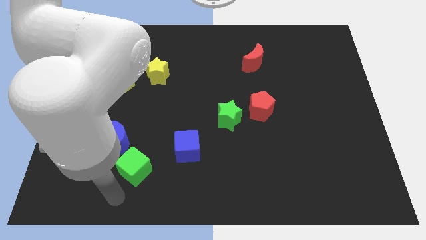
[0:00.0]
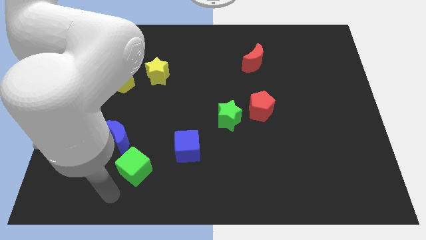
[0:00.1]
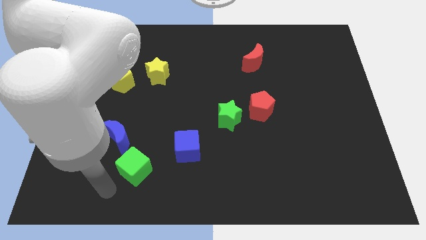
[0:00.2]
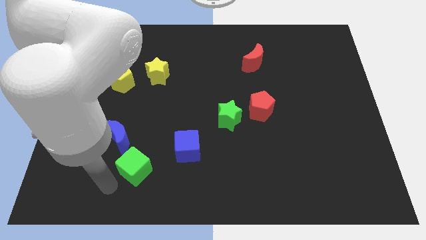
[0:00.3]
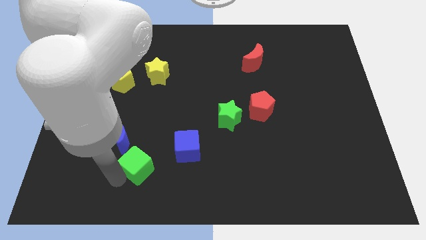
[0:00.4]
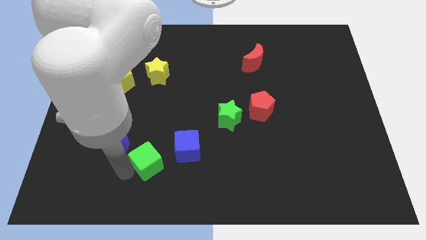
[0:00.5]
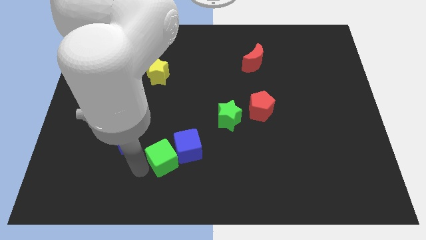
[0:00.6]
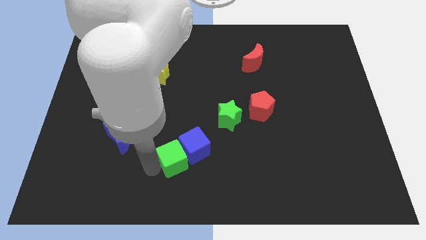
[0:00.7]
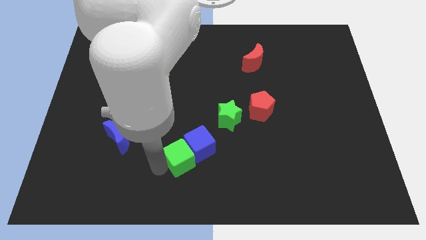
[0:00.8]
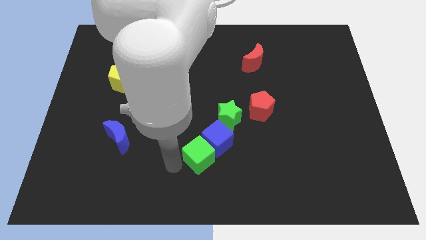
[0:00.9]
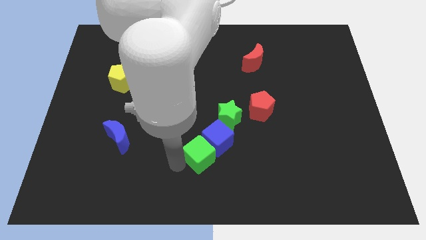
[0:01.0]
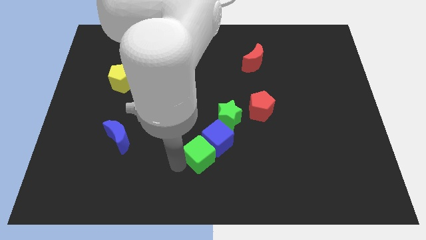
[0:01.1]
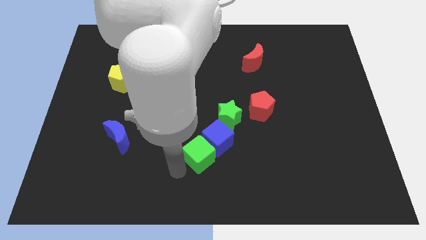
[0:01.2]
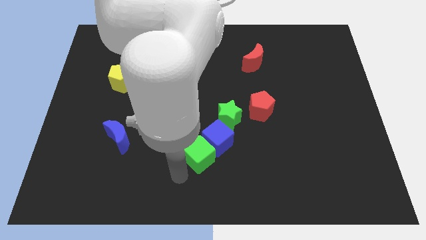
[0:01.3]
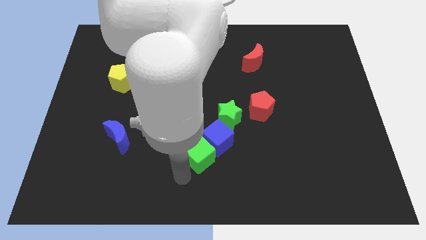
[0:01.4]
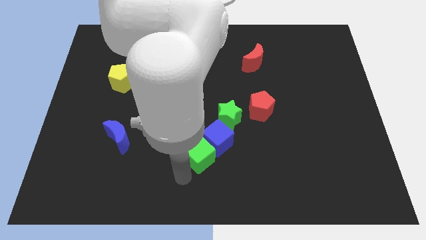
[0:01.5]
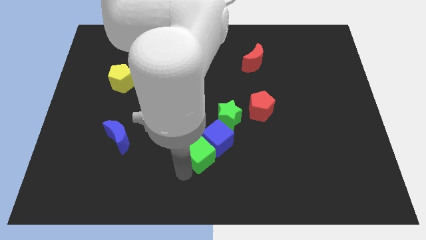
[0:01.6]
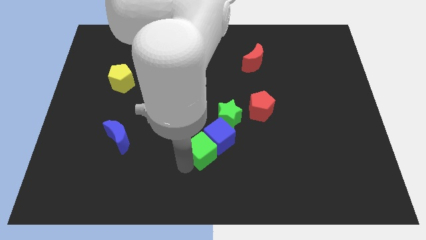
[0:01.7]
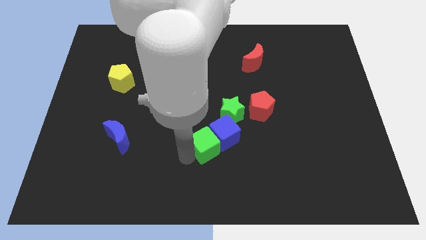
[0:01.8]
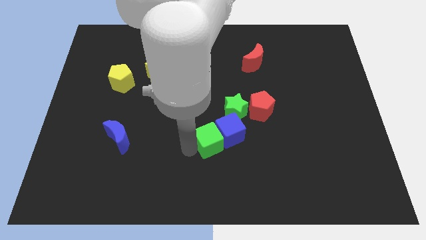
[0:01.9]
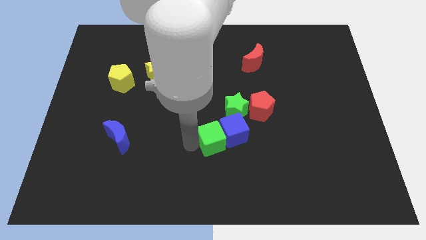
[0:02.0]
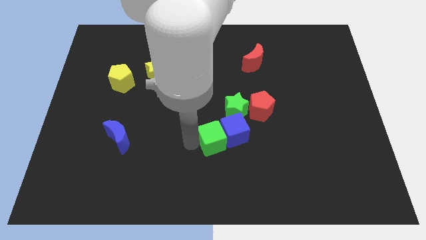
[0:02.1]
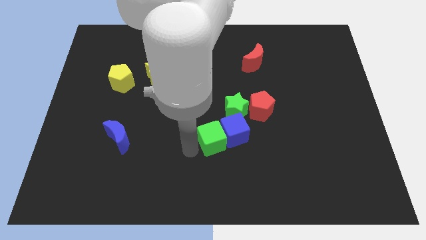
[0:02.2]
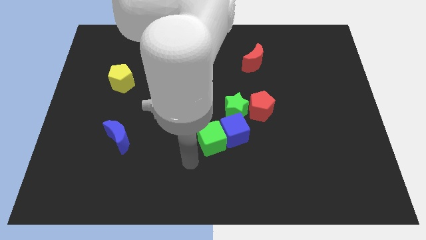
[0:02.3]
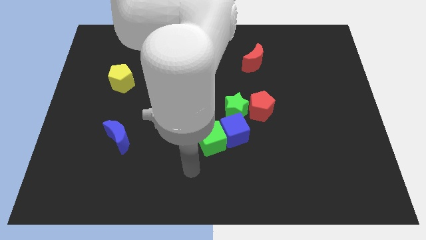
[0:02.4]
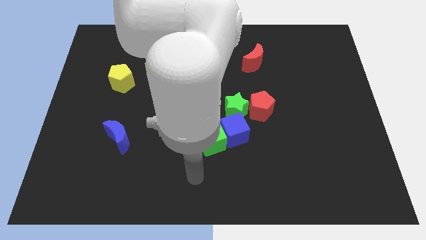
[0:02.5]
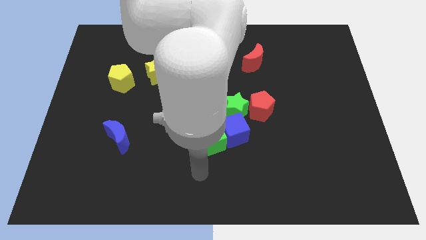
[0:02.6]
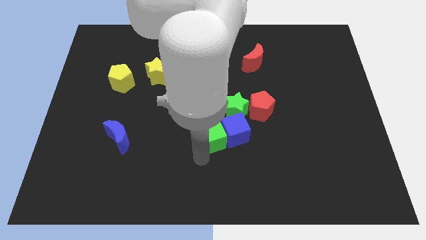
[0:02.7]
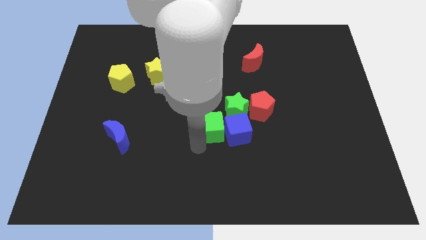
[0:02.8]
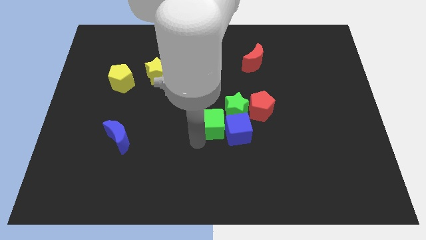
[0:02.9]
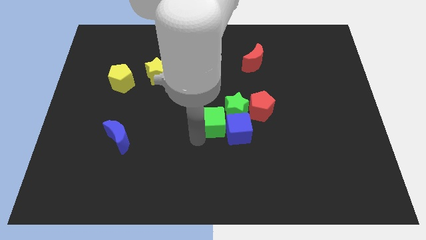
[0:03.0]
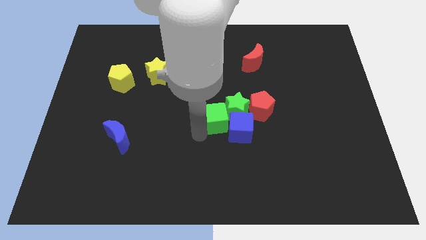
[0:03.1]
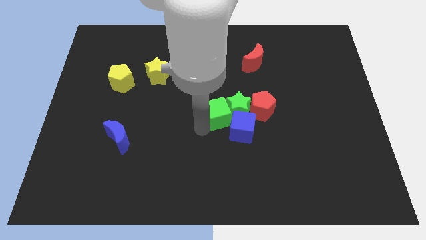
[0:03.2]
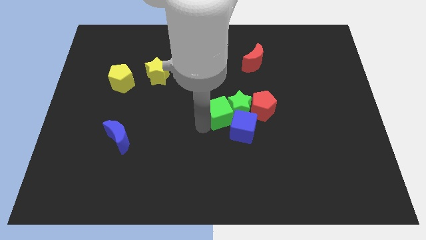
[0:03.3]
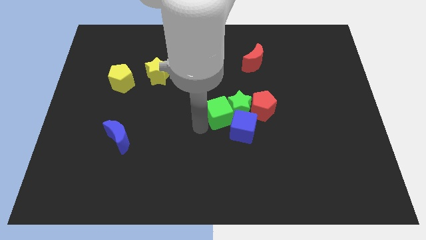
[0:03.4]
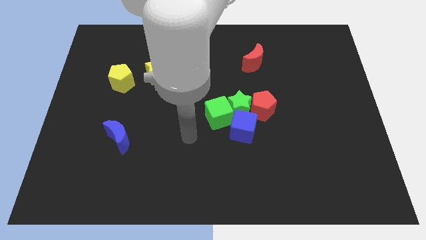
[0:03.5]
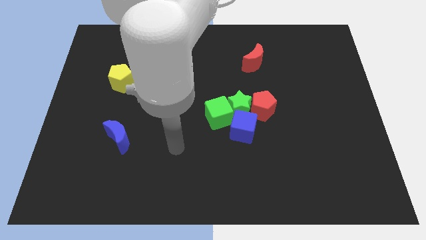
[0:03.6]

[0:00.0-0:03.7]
push group of blocks towards the center of the board

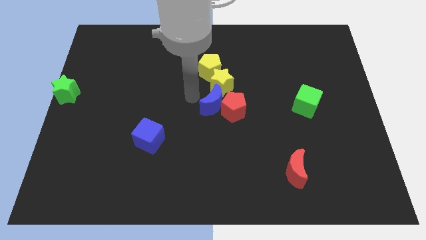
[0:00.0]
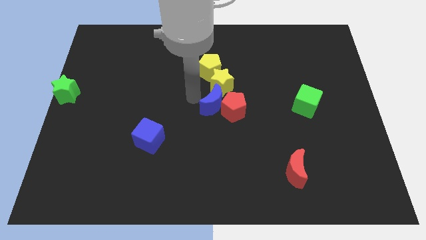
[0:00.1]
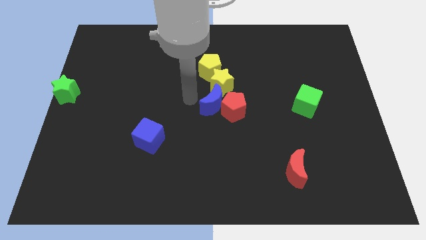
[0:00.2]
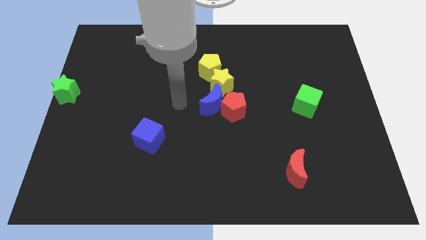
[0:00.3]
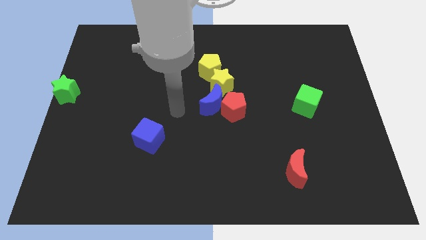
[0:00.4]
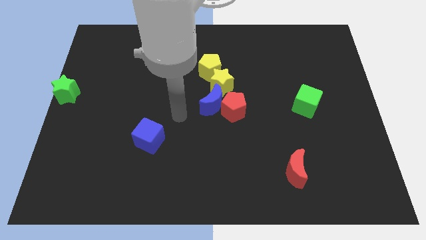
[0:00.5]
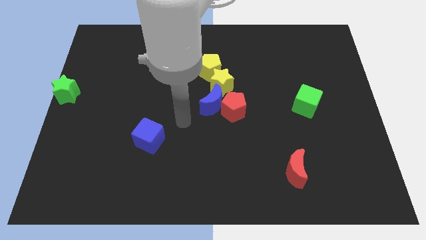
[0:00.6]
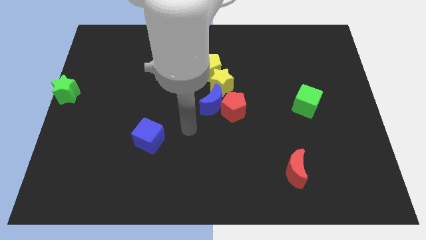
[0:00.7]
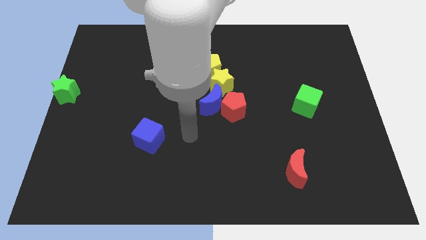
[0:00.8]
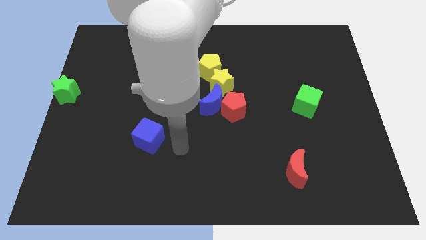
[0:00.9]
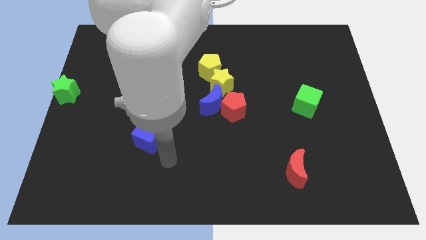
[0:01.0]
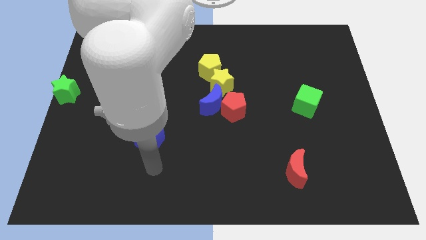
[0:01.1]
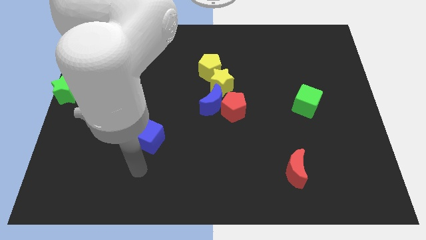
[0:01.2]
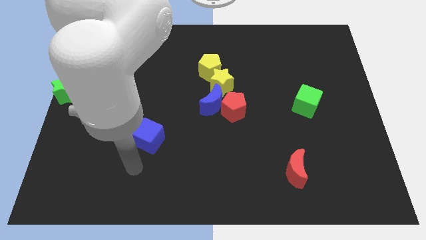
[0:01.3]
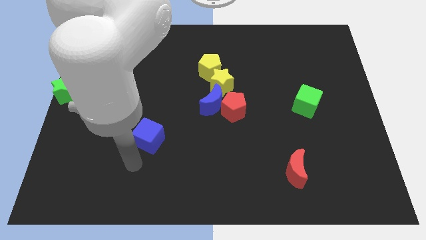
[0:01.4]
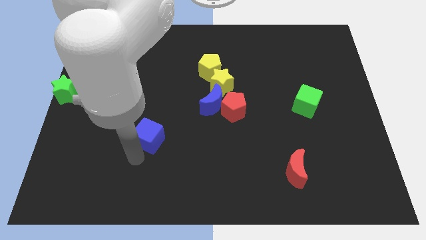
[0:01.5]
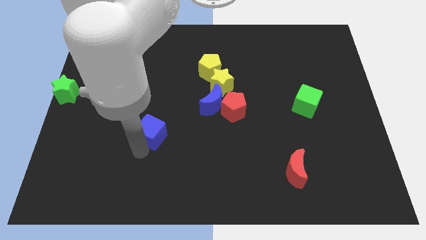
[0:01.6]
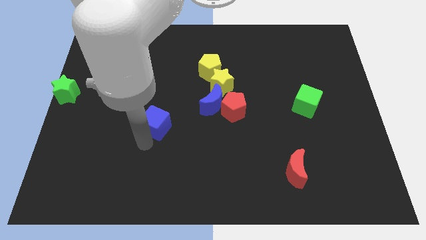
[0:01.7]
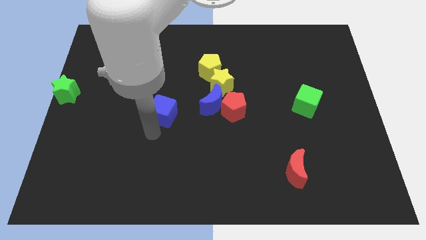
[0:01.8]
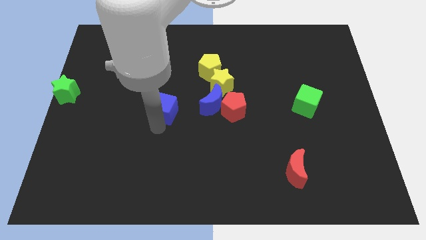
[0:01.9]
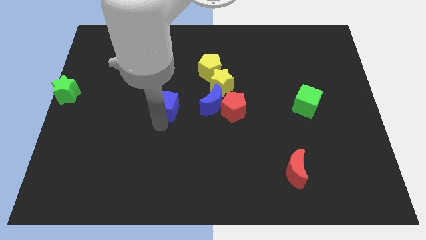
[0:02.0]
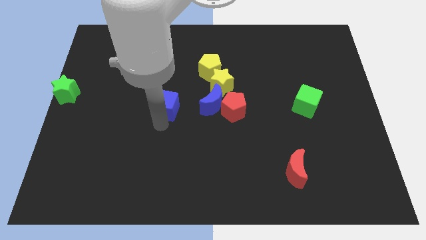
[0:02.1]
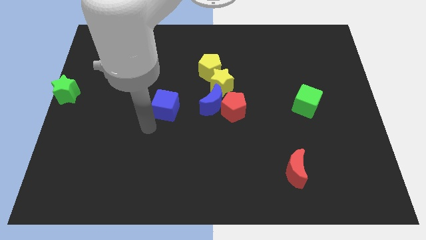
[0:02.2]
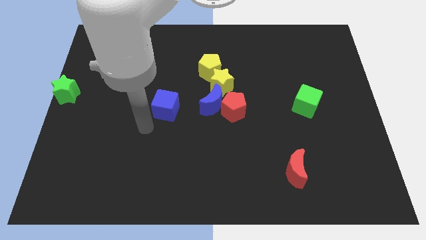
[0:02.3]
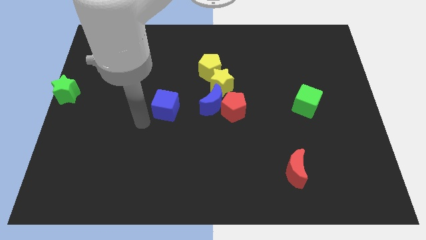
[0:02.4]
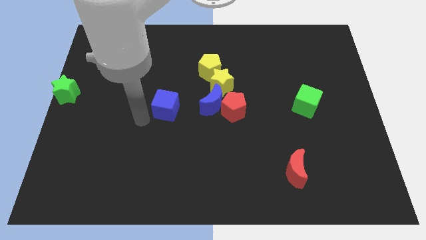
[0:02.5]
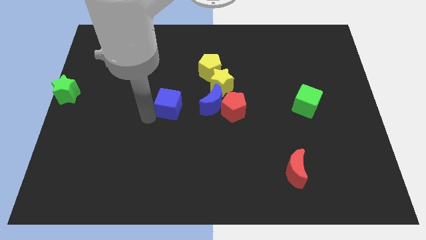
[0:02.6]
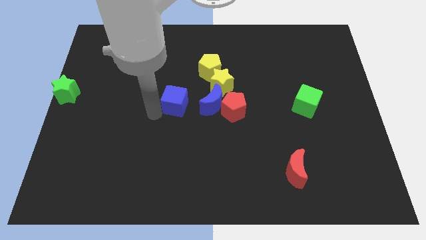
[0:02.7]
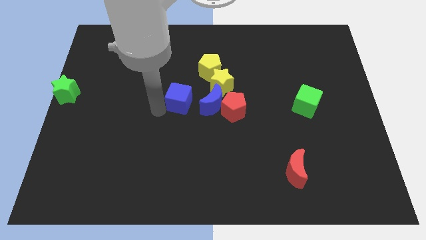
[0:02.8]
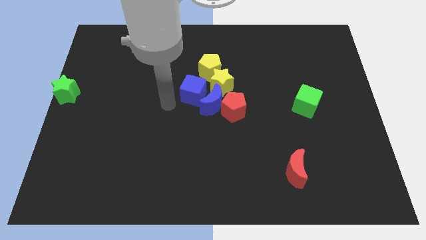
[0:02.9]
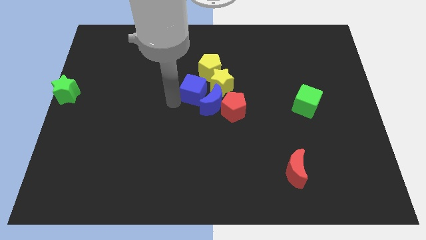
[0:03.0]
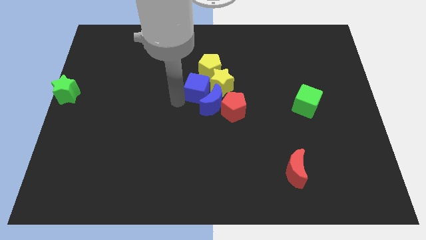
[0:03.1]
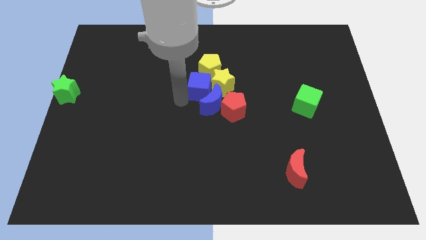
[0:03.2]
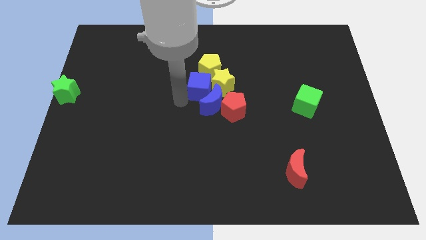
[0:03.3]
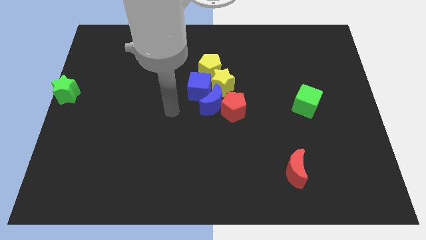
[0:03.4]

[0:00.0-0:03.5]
push the blue cube to the left of the yellow star

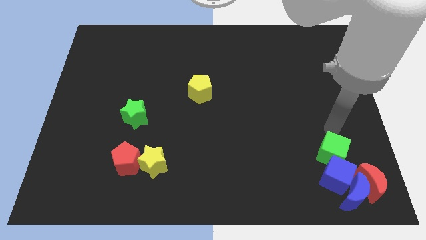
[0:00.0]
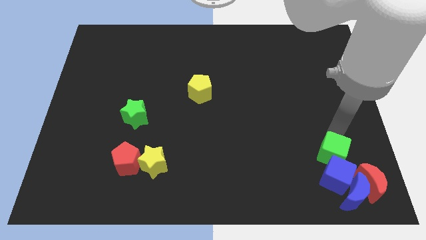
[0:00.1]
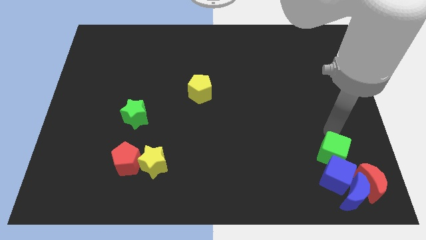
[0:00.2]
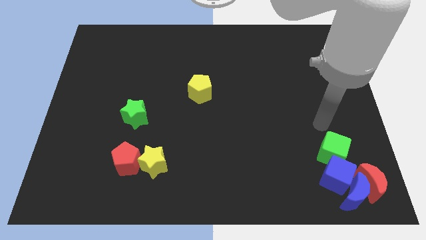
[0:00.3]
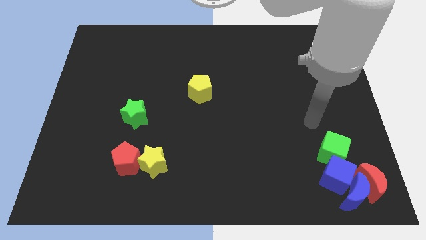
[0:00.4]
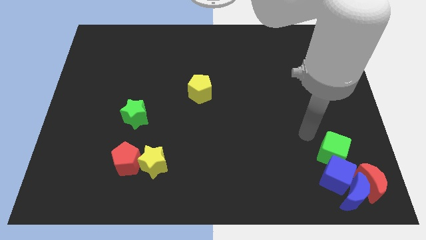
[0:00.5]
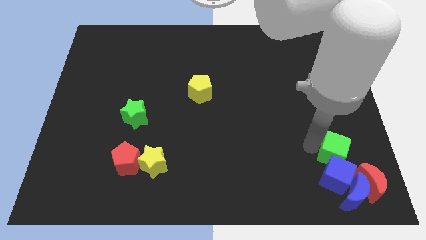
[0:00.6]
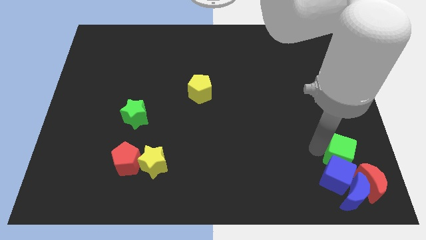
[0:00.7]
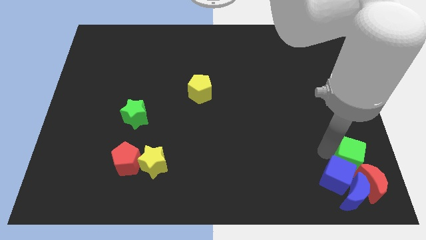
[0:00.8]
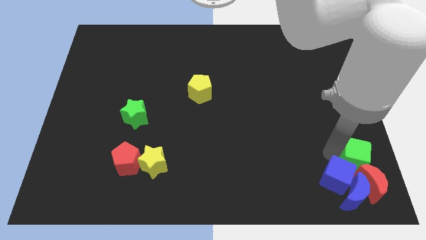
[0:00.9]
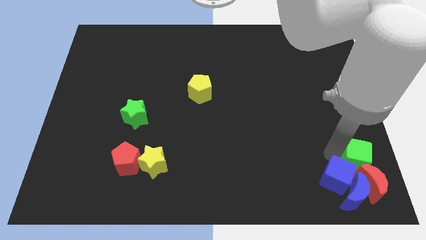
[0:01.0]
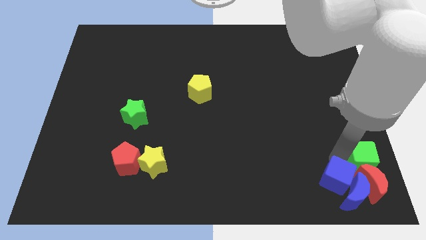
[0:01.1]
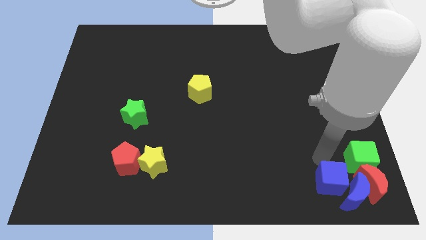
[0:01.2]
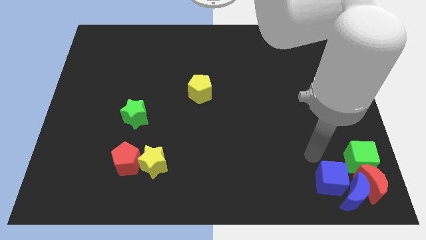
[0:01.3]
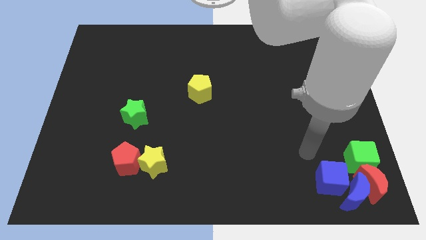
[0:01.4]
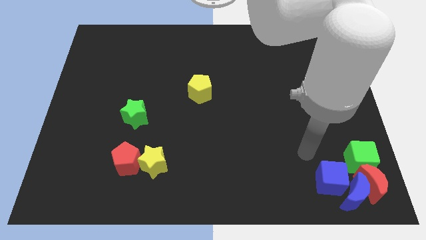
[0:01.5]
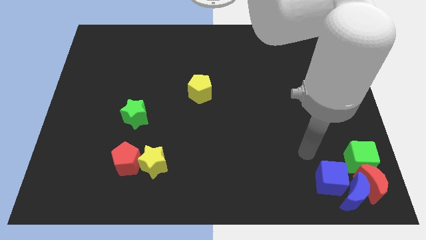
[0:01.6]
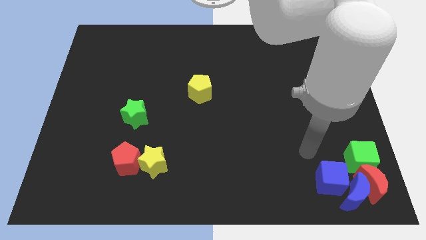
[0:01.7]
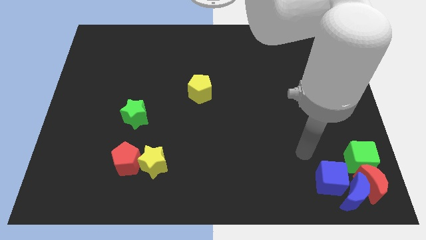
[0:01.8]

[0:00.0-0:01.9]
place the green cube above the red moon
